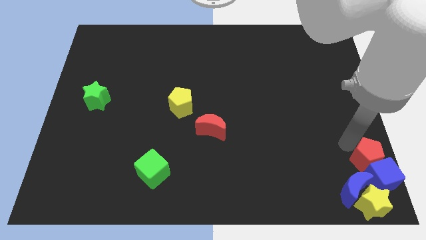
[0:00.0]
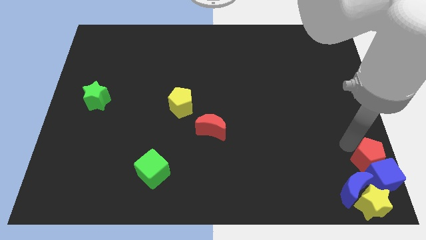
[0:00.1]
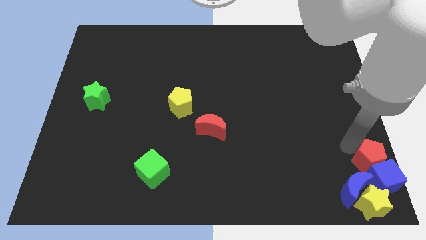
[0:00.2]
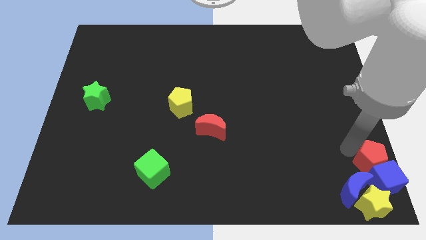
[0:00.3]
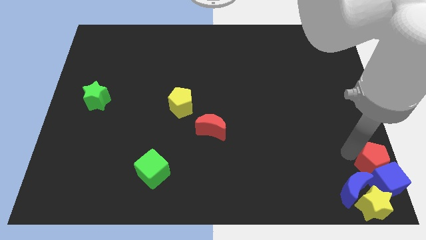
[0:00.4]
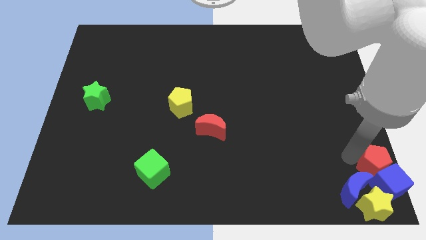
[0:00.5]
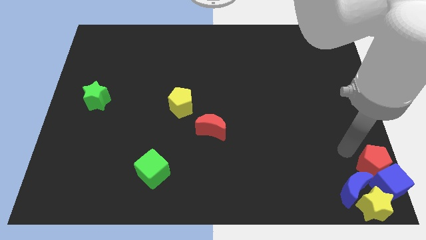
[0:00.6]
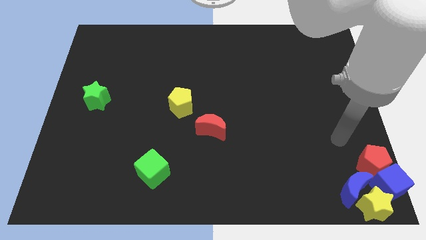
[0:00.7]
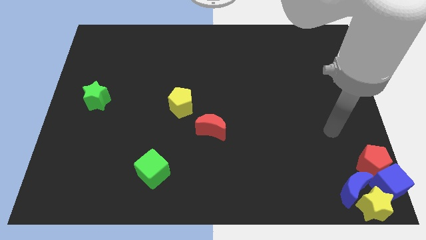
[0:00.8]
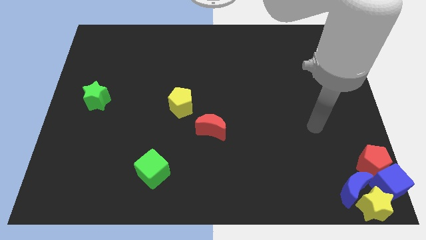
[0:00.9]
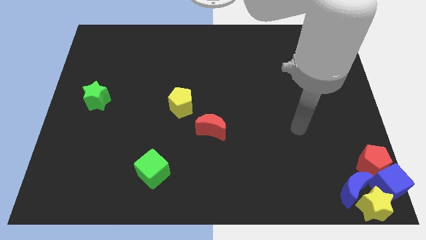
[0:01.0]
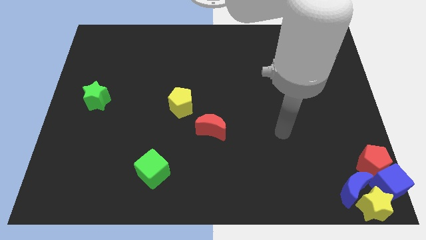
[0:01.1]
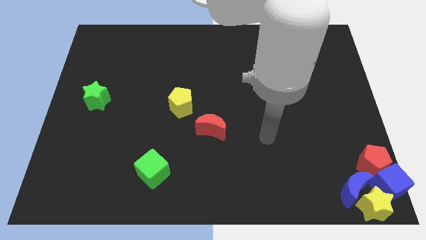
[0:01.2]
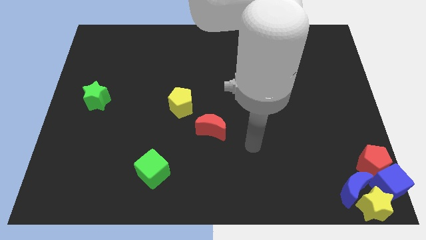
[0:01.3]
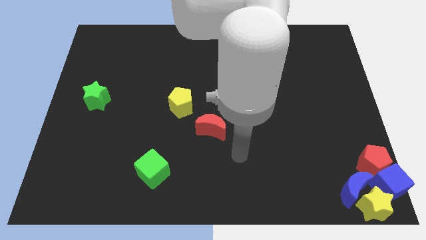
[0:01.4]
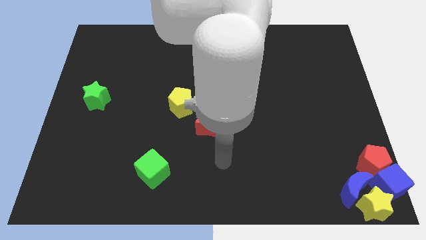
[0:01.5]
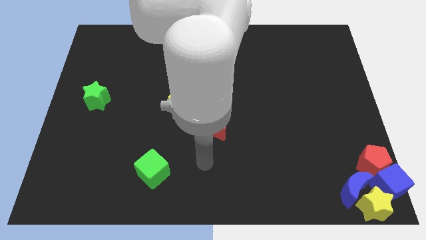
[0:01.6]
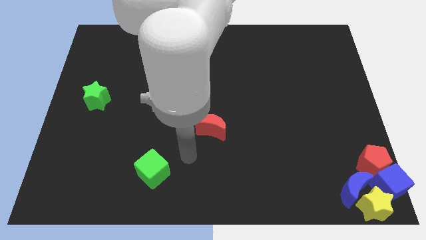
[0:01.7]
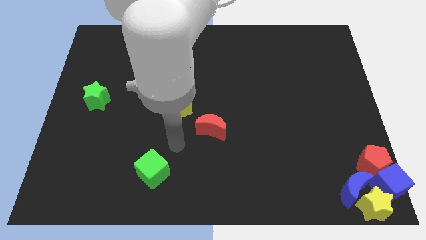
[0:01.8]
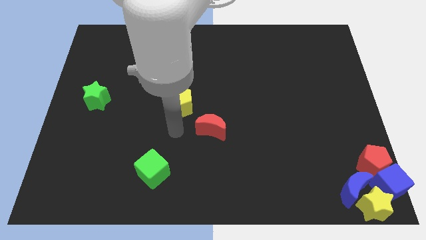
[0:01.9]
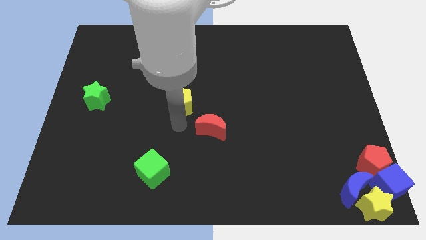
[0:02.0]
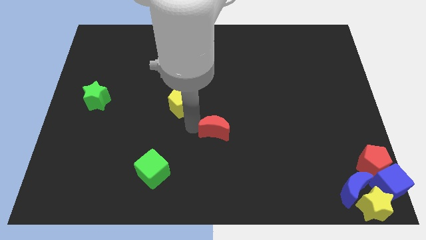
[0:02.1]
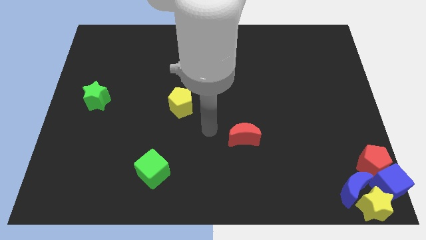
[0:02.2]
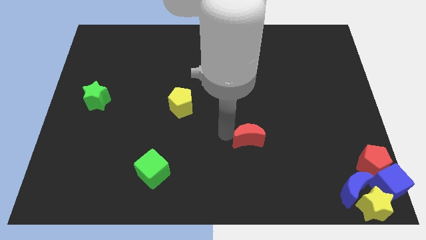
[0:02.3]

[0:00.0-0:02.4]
move the red moon towards the left of the red pentagon

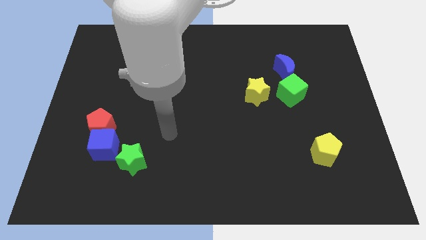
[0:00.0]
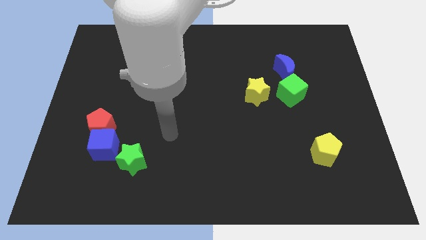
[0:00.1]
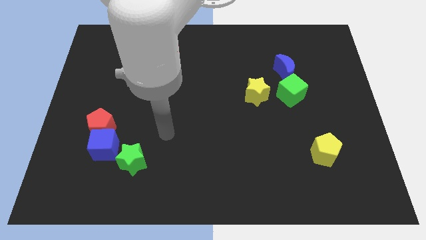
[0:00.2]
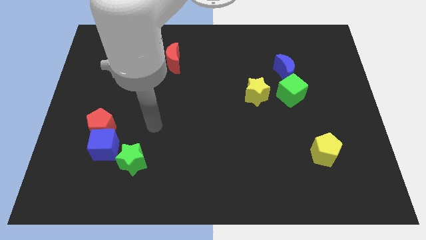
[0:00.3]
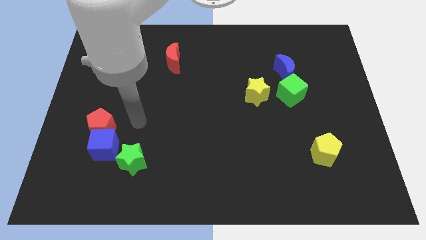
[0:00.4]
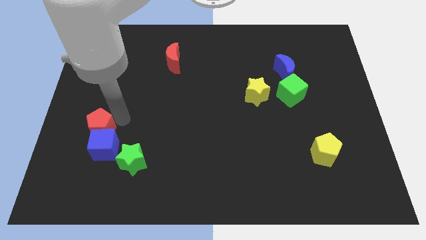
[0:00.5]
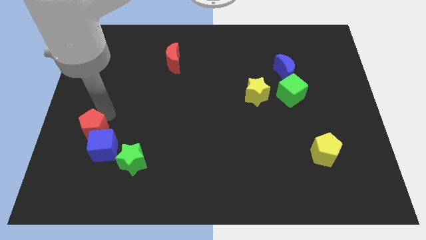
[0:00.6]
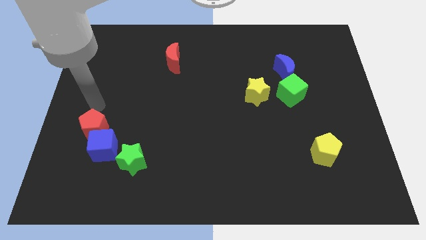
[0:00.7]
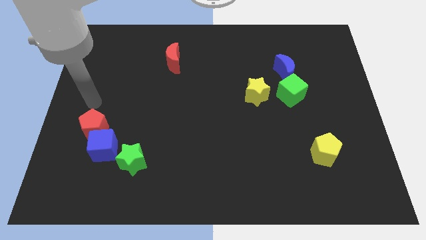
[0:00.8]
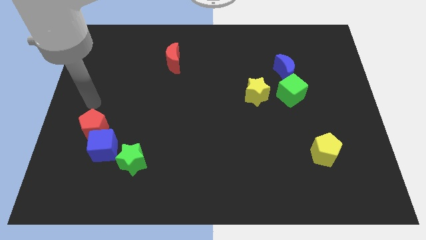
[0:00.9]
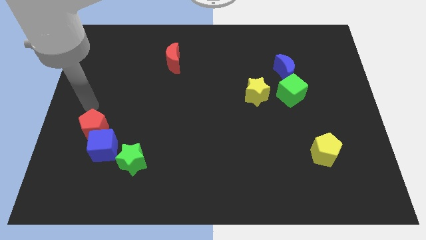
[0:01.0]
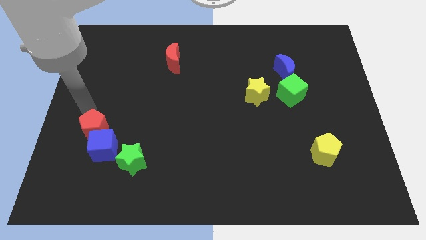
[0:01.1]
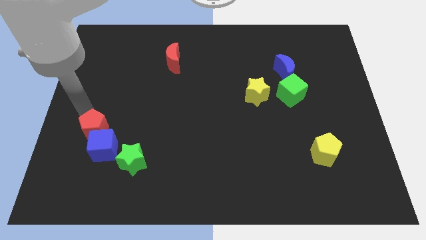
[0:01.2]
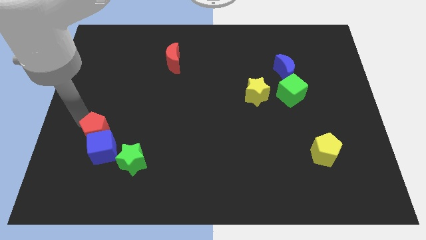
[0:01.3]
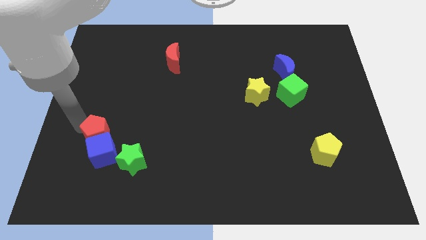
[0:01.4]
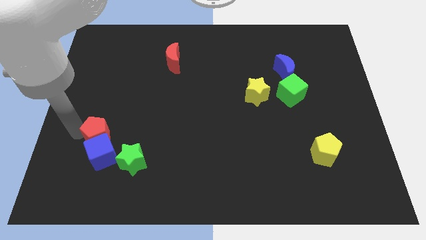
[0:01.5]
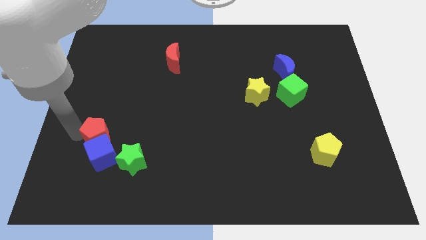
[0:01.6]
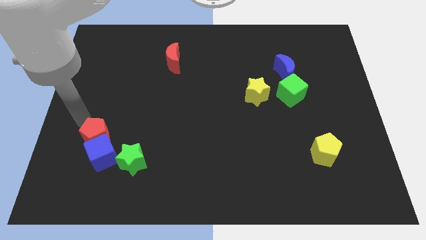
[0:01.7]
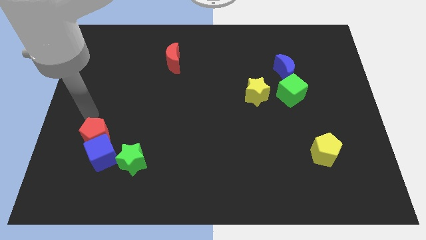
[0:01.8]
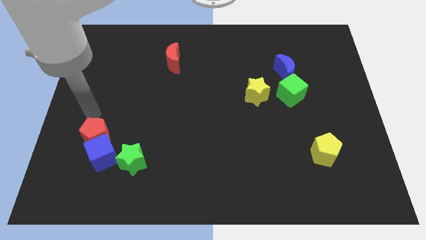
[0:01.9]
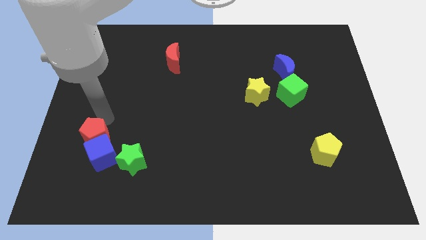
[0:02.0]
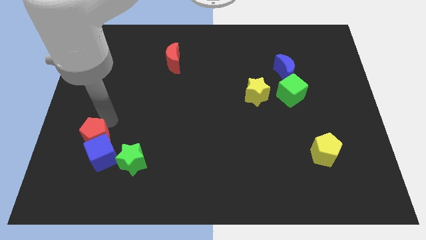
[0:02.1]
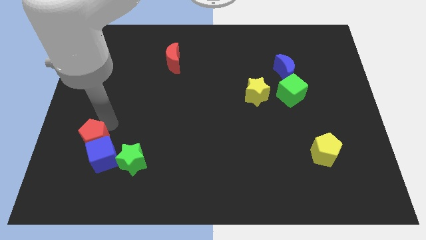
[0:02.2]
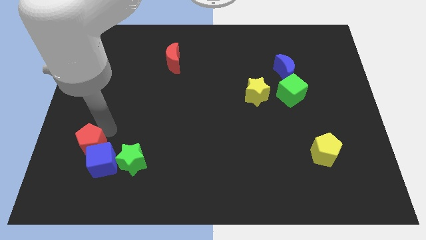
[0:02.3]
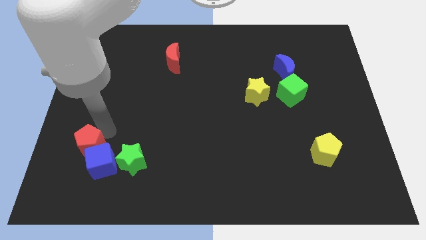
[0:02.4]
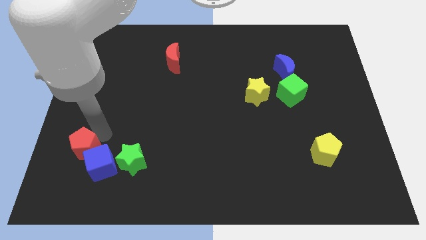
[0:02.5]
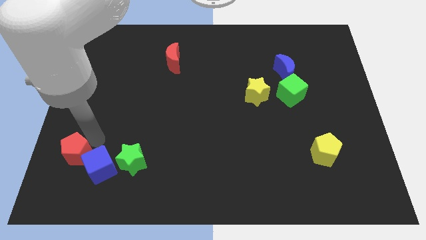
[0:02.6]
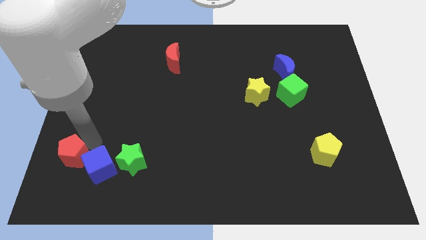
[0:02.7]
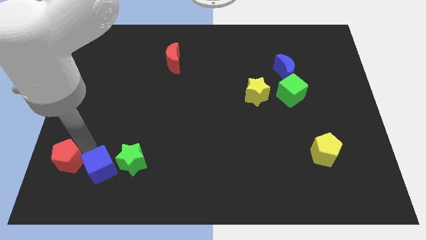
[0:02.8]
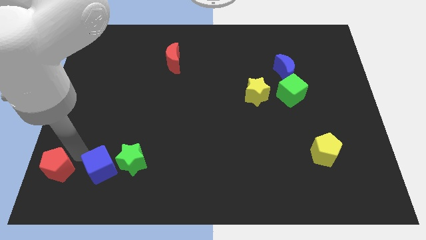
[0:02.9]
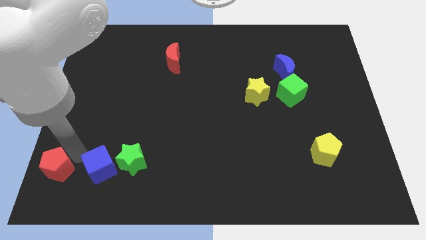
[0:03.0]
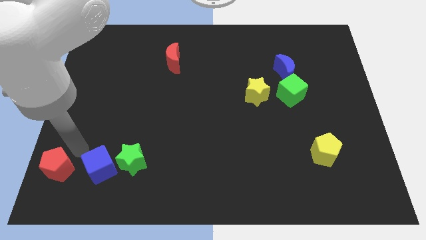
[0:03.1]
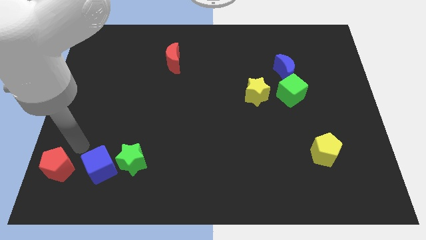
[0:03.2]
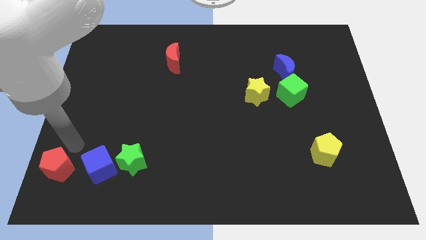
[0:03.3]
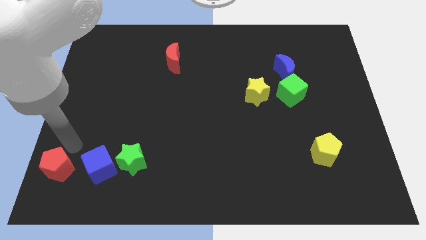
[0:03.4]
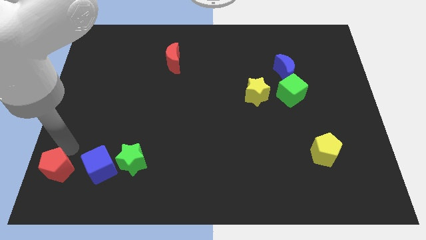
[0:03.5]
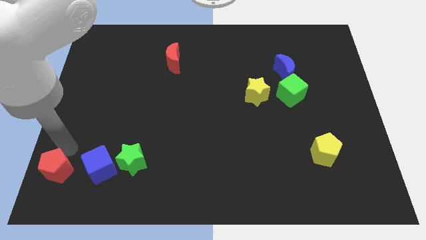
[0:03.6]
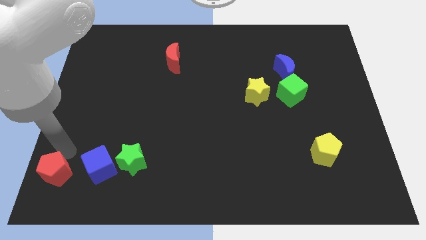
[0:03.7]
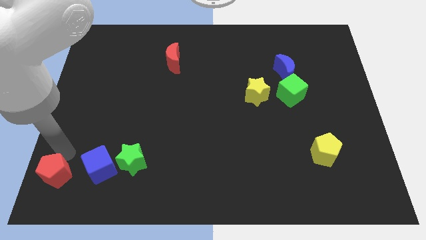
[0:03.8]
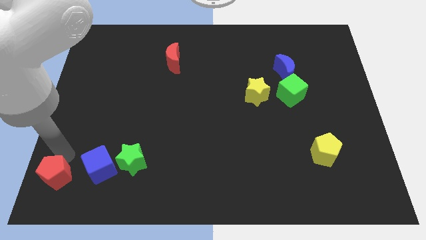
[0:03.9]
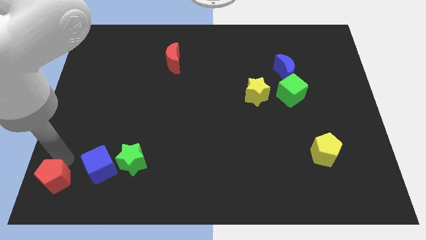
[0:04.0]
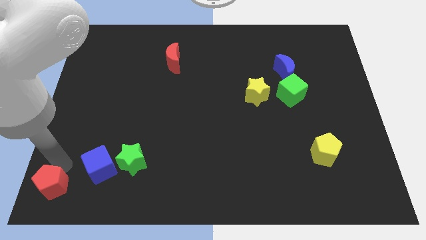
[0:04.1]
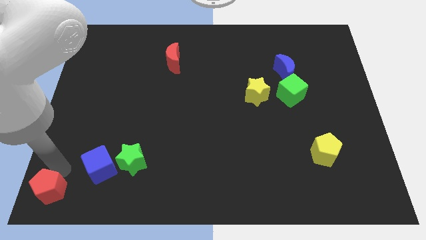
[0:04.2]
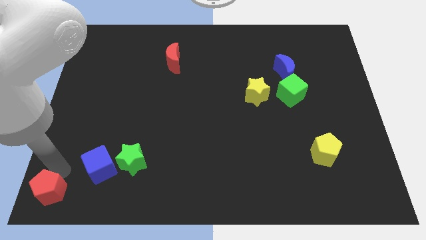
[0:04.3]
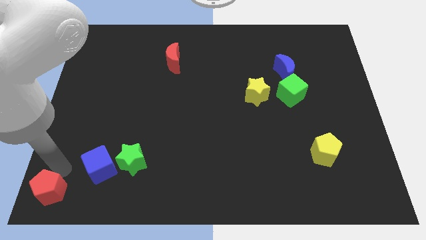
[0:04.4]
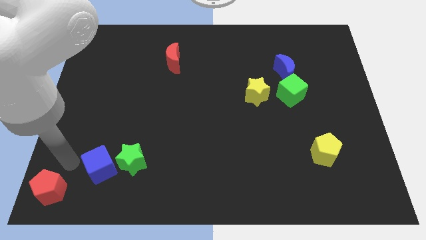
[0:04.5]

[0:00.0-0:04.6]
push red pentagon to the bottom left

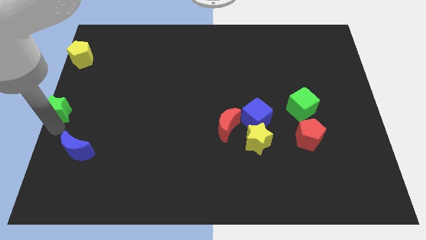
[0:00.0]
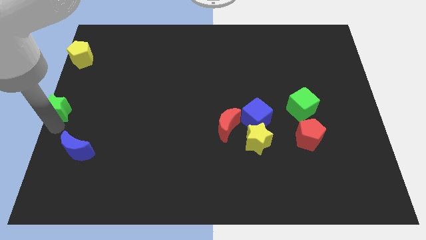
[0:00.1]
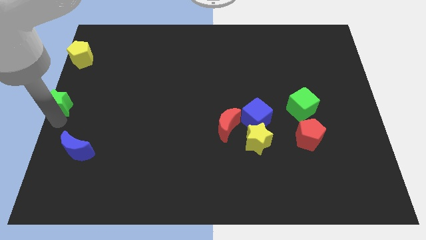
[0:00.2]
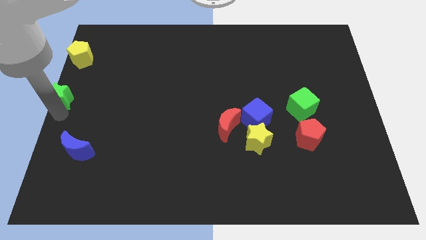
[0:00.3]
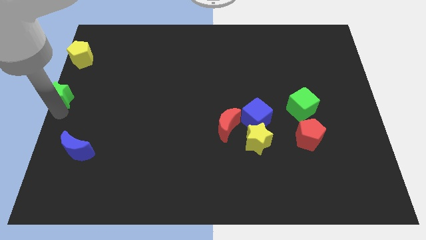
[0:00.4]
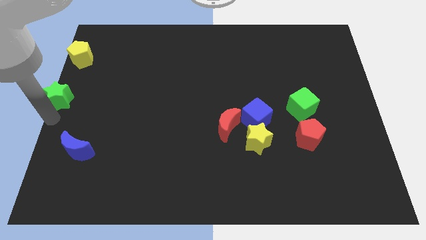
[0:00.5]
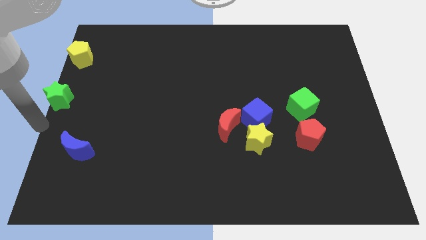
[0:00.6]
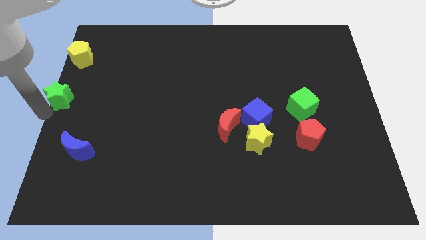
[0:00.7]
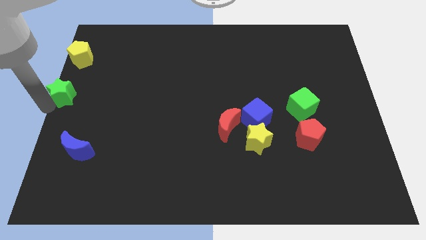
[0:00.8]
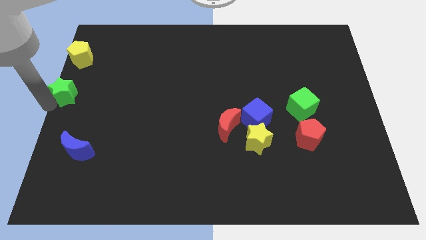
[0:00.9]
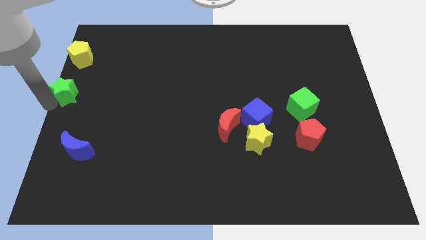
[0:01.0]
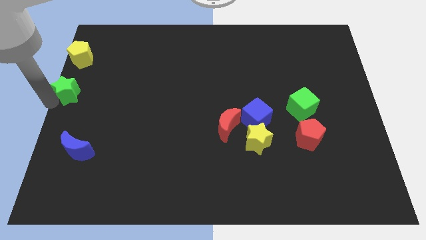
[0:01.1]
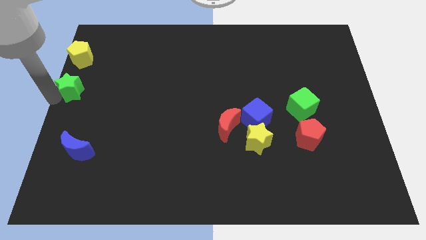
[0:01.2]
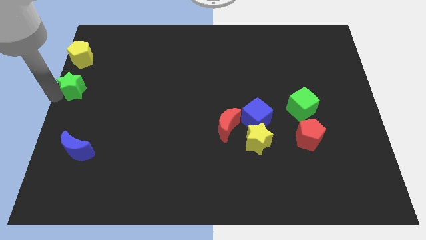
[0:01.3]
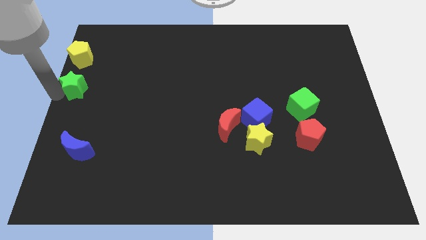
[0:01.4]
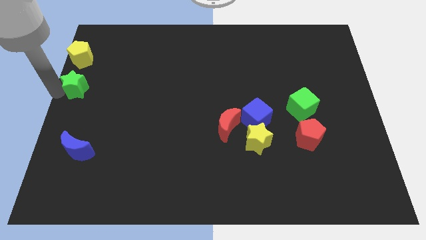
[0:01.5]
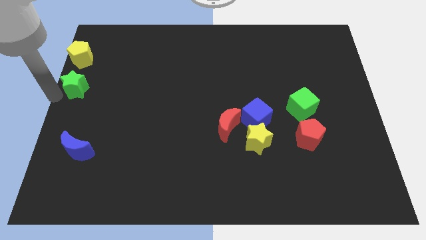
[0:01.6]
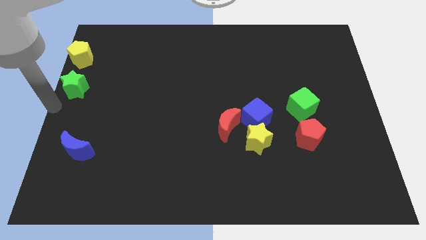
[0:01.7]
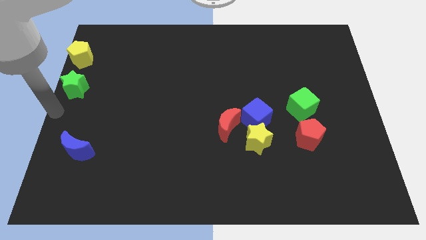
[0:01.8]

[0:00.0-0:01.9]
place the green star below the yellow pentagon
